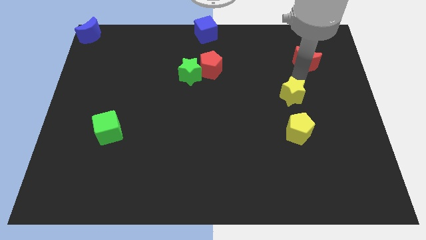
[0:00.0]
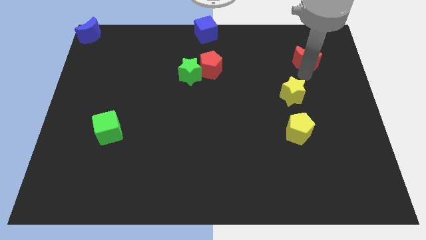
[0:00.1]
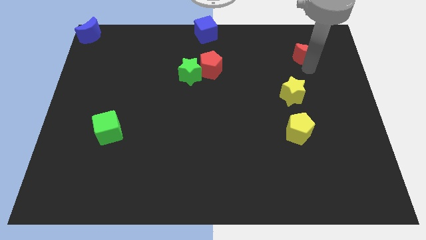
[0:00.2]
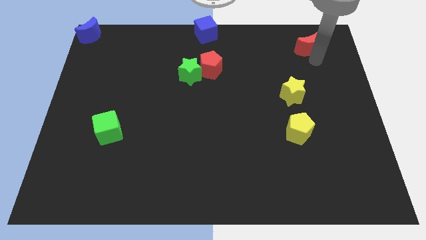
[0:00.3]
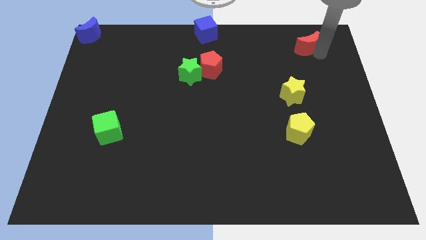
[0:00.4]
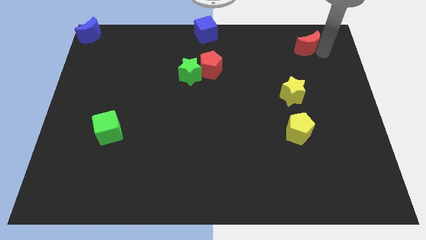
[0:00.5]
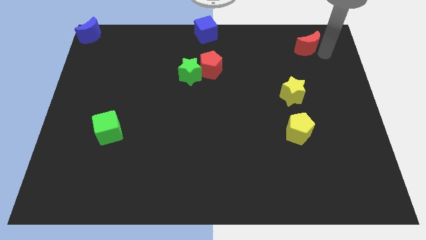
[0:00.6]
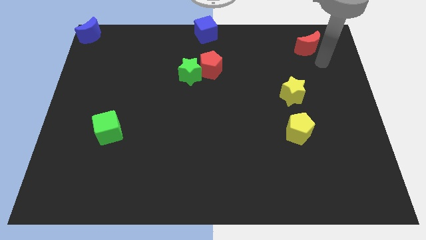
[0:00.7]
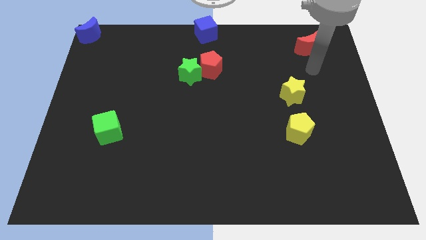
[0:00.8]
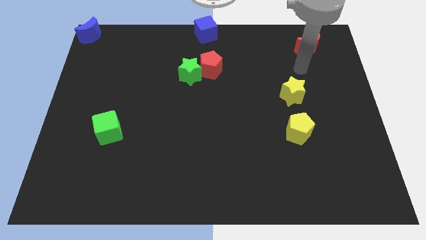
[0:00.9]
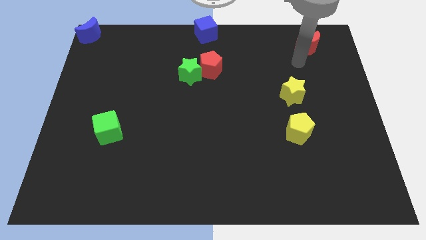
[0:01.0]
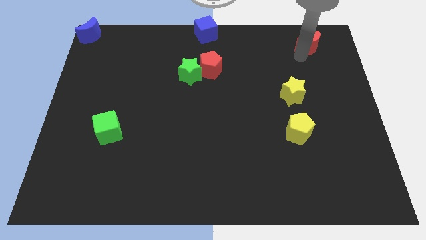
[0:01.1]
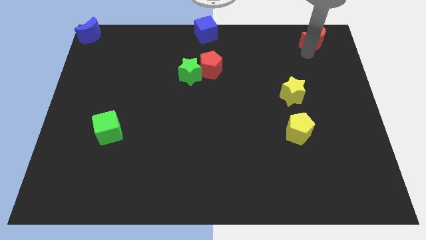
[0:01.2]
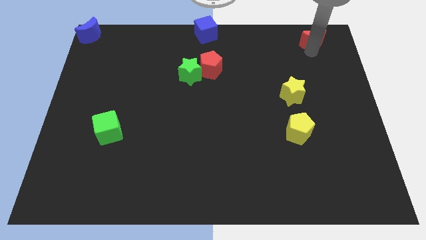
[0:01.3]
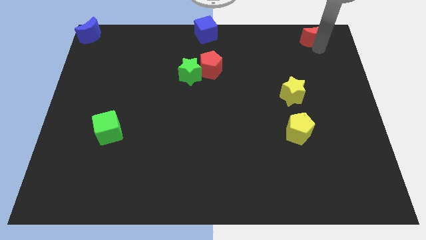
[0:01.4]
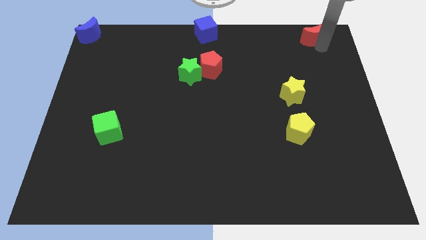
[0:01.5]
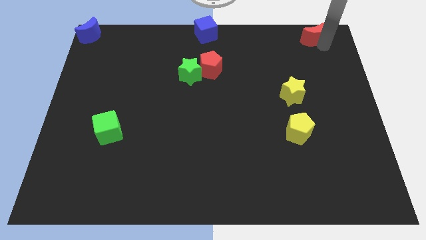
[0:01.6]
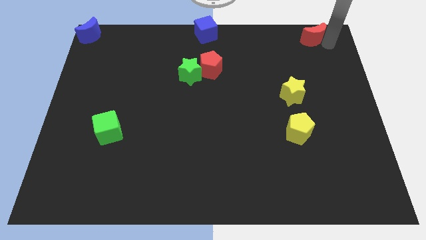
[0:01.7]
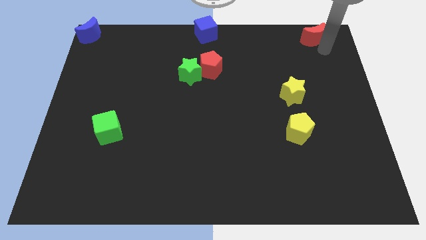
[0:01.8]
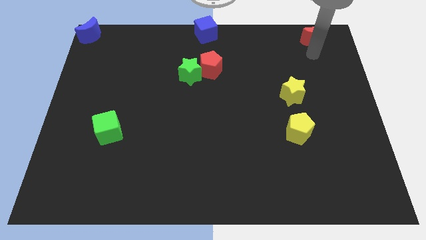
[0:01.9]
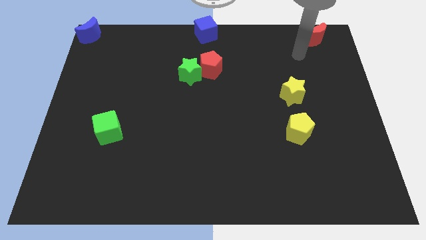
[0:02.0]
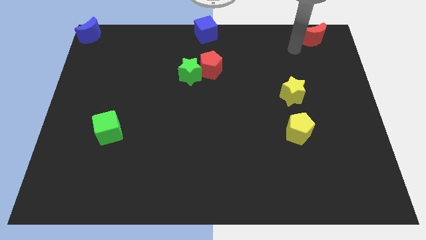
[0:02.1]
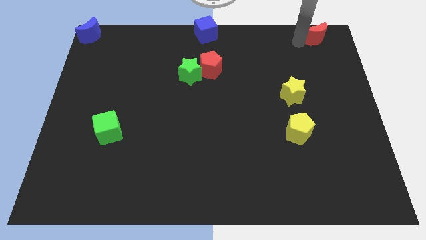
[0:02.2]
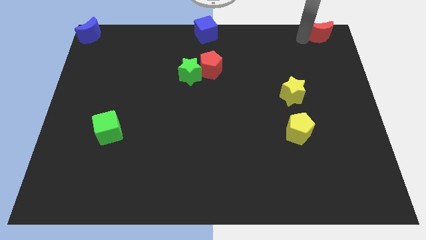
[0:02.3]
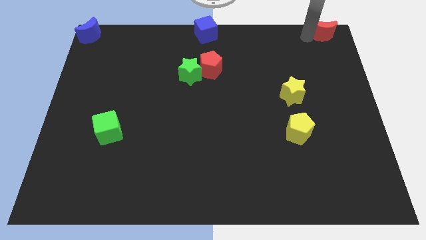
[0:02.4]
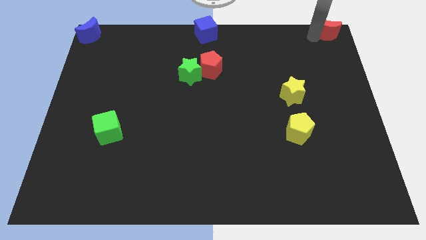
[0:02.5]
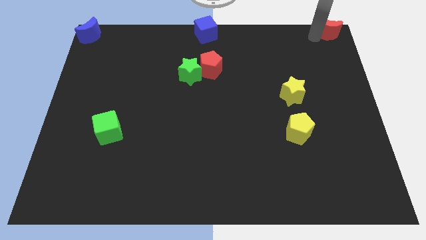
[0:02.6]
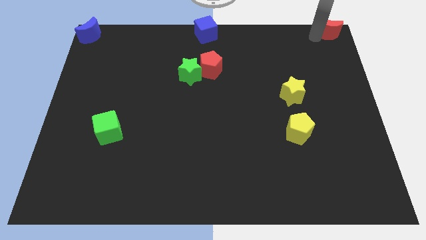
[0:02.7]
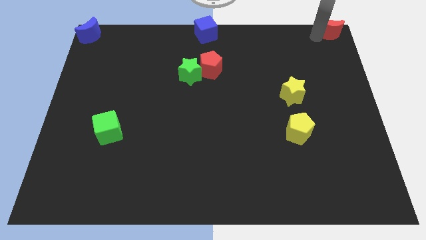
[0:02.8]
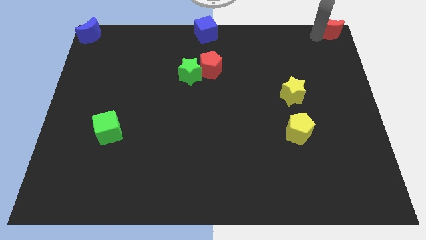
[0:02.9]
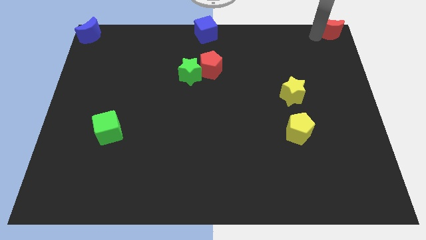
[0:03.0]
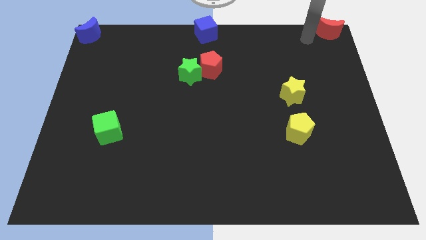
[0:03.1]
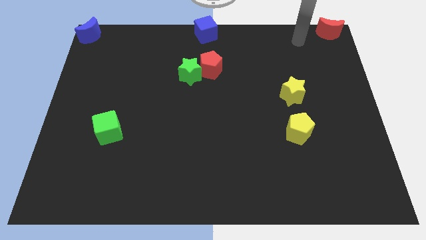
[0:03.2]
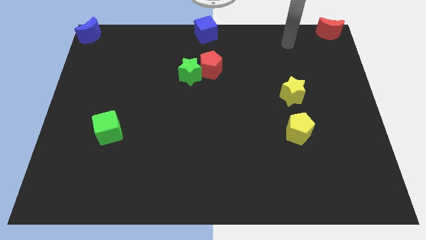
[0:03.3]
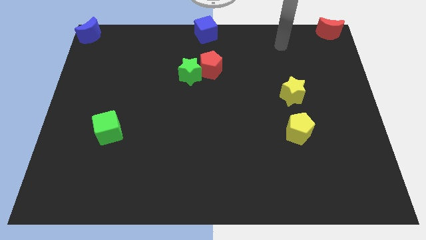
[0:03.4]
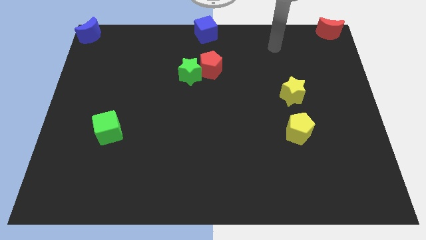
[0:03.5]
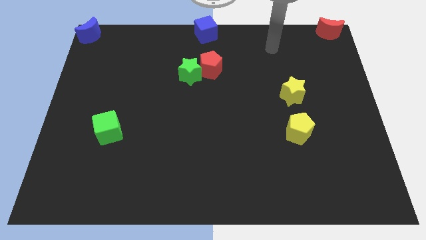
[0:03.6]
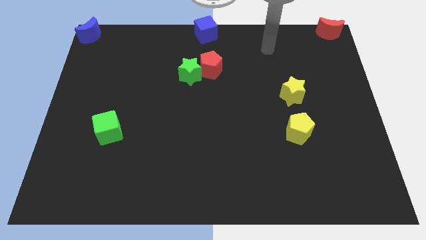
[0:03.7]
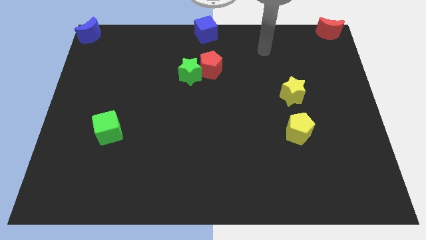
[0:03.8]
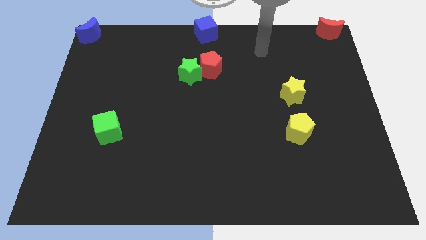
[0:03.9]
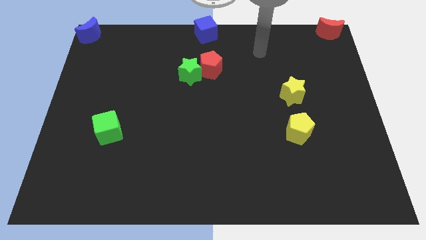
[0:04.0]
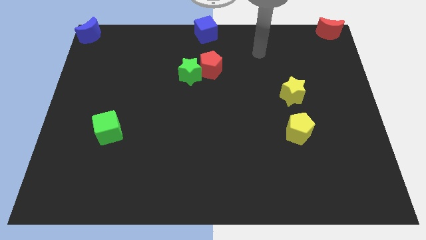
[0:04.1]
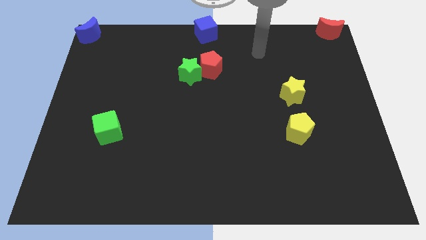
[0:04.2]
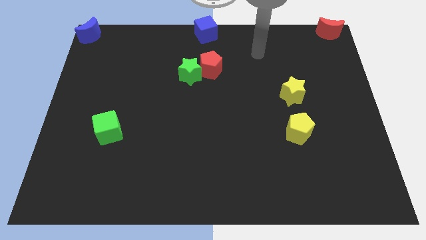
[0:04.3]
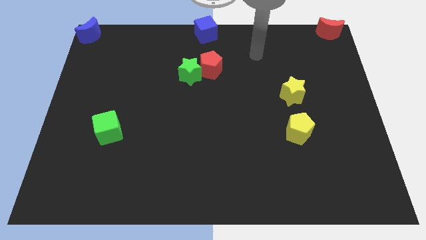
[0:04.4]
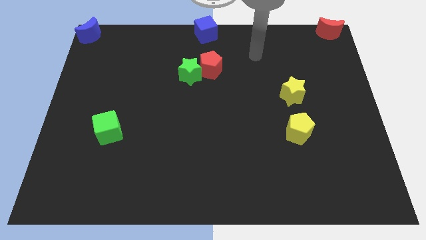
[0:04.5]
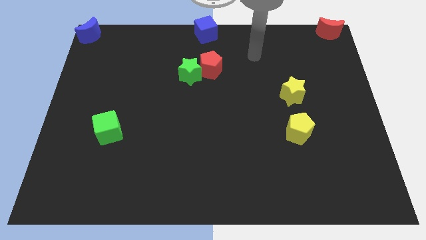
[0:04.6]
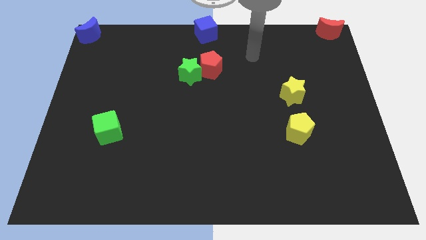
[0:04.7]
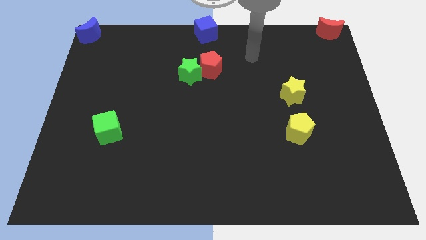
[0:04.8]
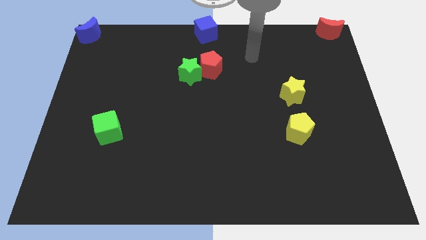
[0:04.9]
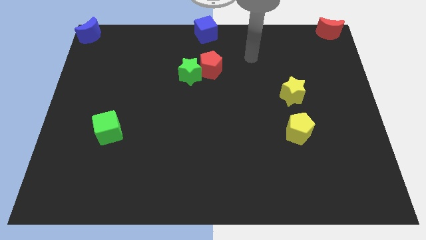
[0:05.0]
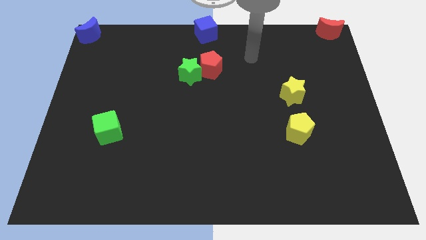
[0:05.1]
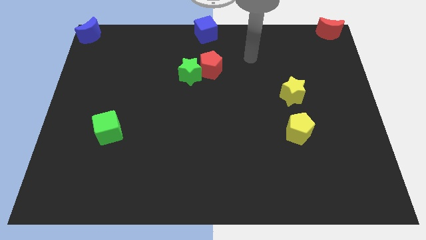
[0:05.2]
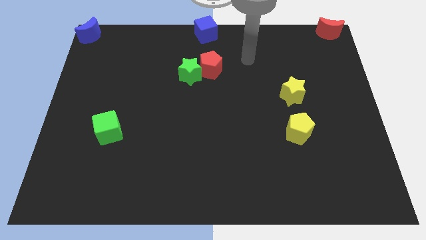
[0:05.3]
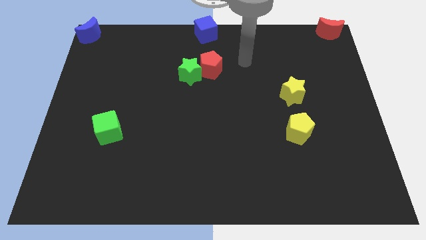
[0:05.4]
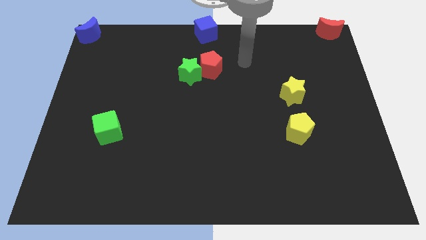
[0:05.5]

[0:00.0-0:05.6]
move the red crescent to the top right of the board

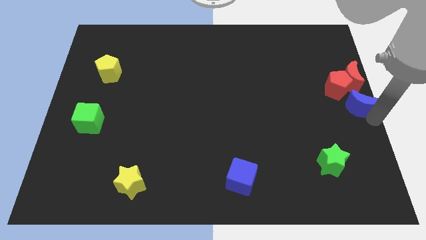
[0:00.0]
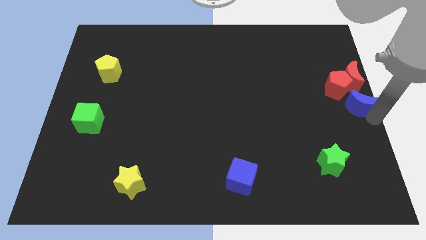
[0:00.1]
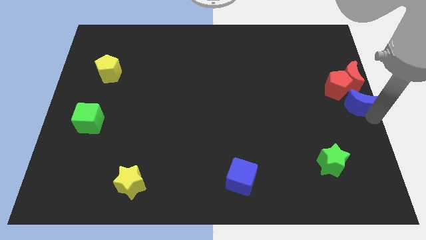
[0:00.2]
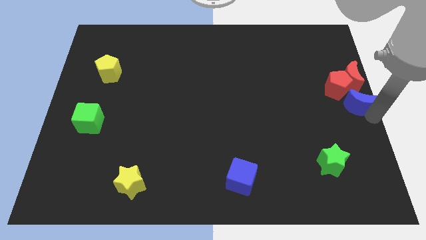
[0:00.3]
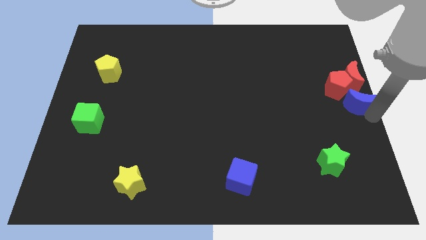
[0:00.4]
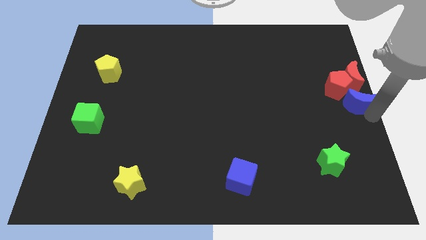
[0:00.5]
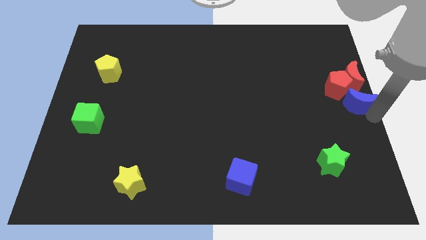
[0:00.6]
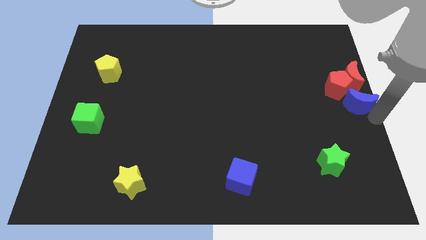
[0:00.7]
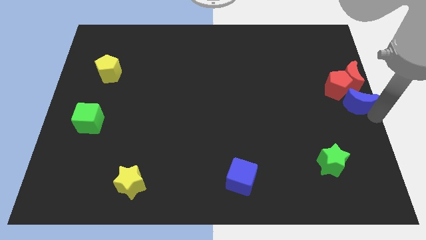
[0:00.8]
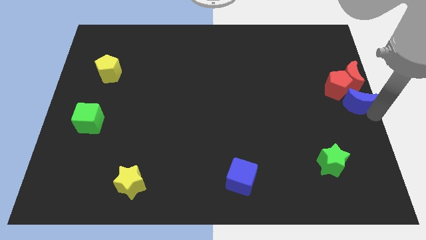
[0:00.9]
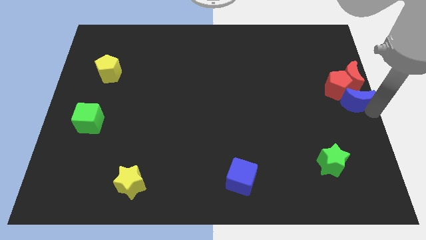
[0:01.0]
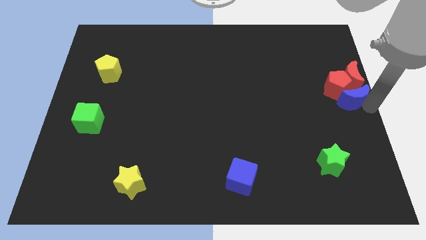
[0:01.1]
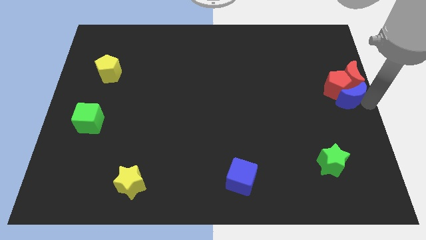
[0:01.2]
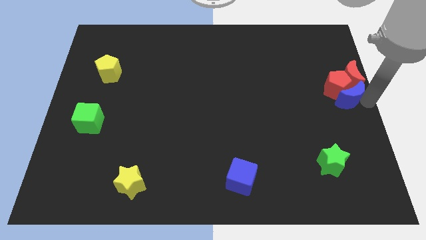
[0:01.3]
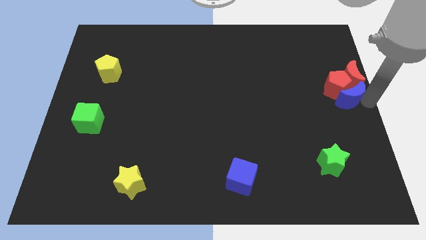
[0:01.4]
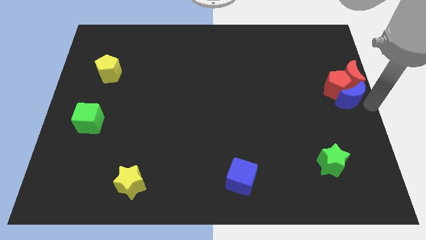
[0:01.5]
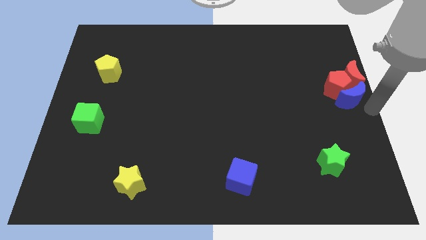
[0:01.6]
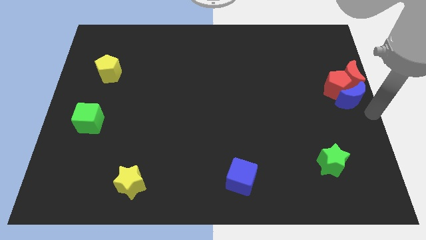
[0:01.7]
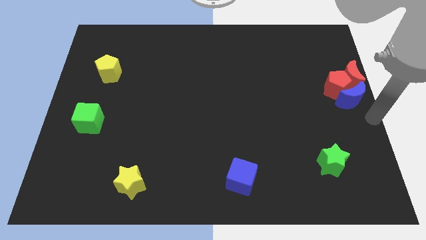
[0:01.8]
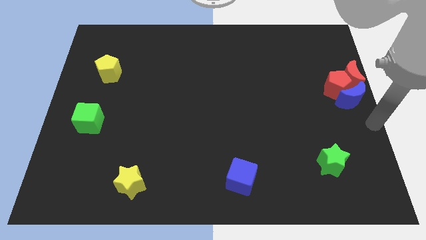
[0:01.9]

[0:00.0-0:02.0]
adjust the blue crescent into the red pentagon from the bottom

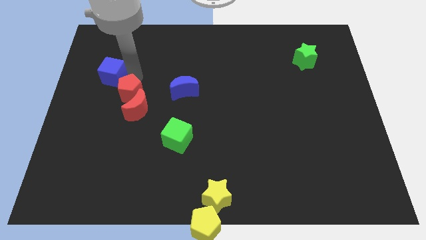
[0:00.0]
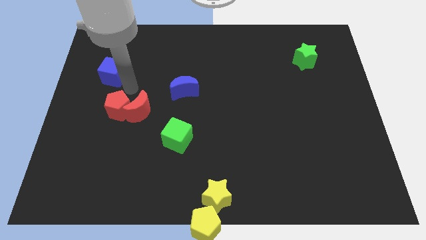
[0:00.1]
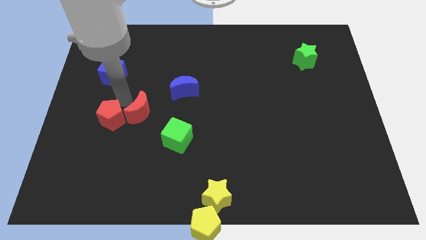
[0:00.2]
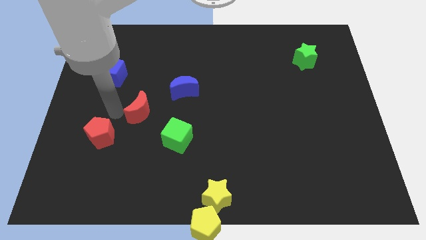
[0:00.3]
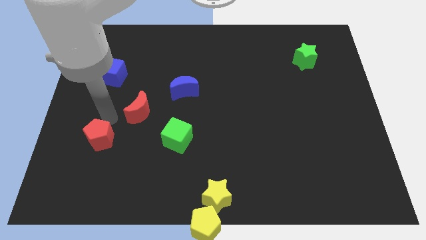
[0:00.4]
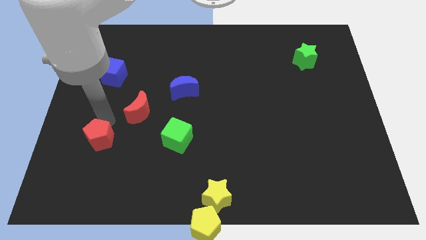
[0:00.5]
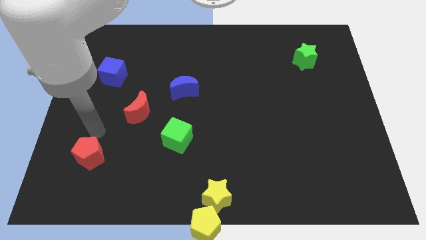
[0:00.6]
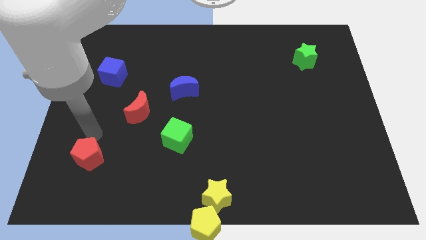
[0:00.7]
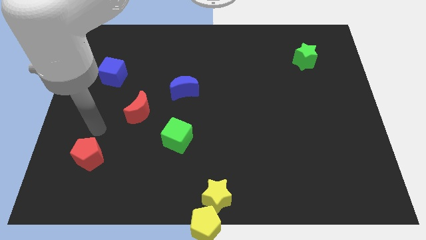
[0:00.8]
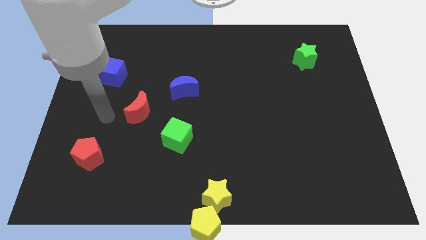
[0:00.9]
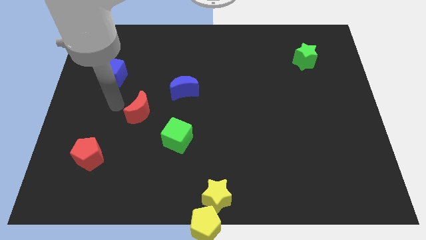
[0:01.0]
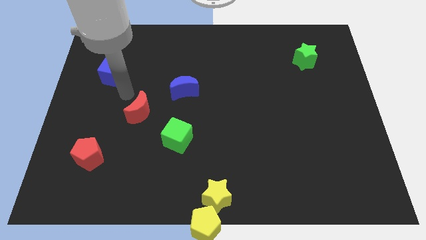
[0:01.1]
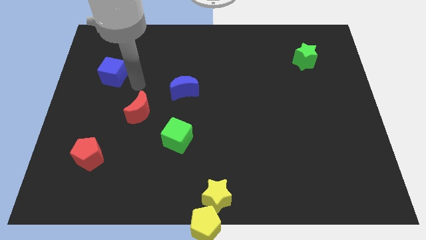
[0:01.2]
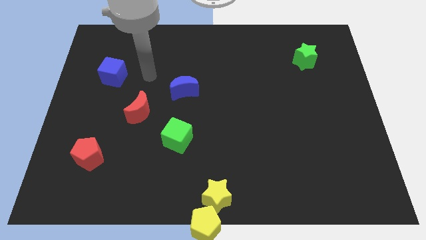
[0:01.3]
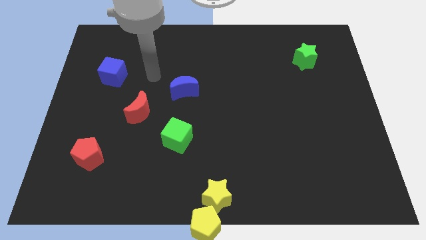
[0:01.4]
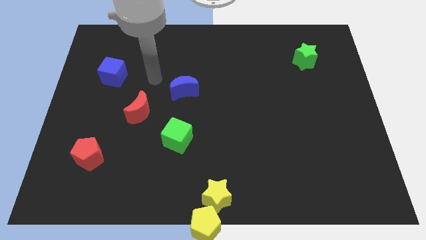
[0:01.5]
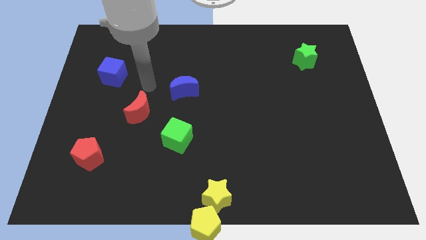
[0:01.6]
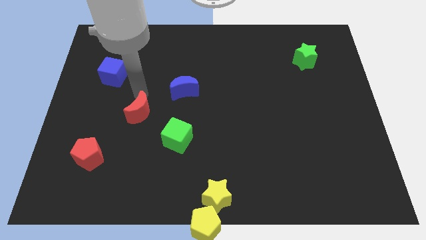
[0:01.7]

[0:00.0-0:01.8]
push red pentagon away from red crescent
